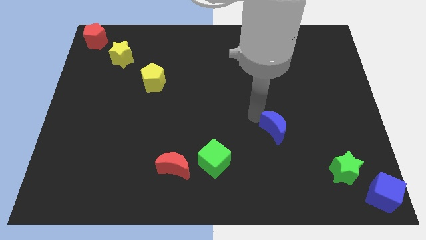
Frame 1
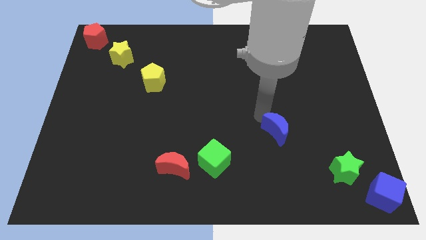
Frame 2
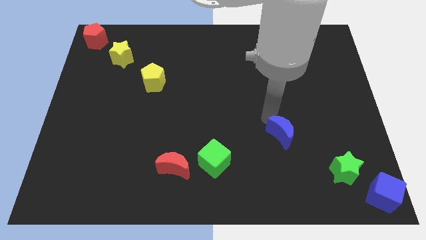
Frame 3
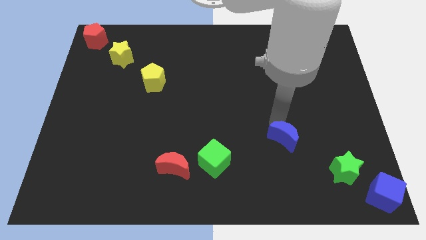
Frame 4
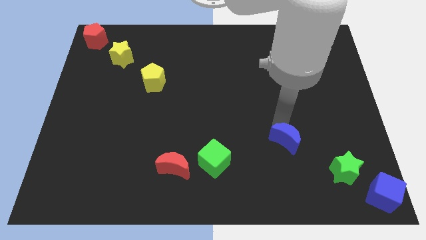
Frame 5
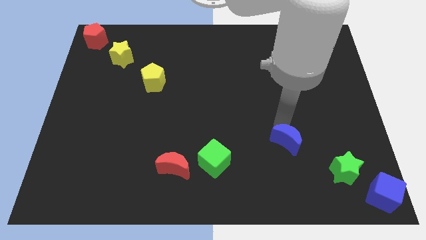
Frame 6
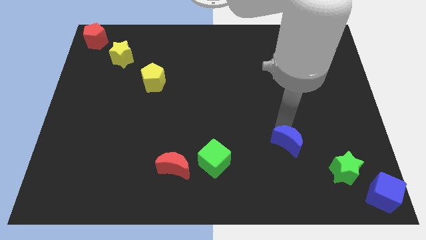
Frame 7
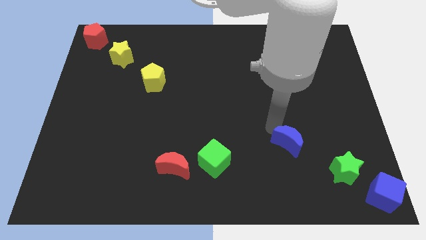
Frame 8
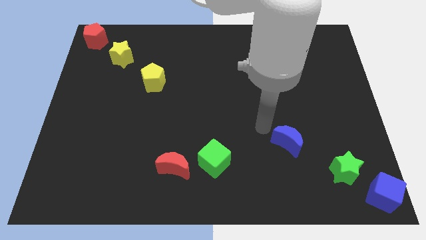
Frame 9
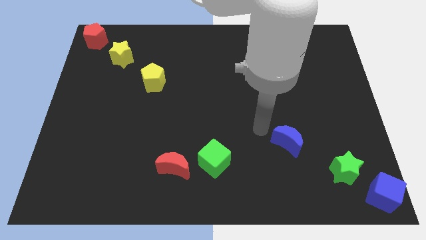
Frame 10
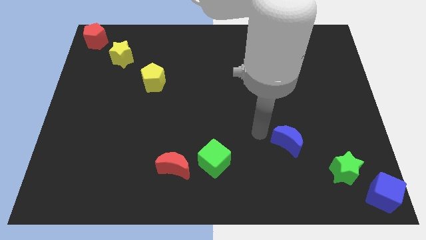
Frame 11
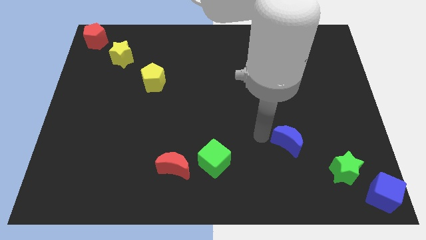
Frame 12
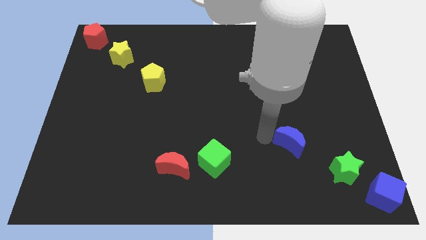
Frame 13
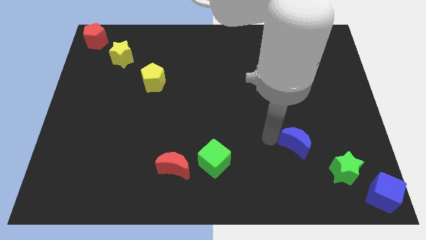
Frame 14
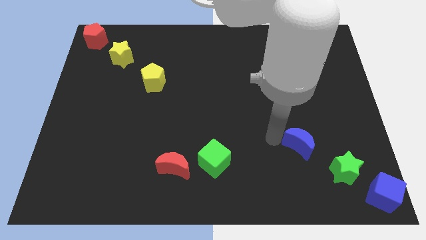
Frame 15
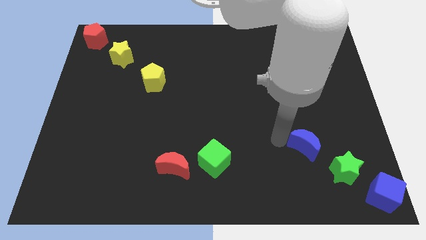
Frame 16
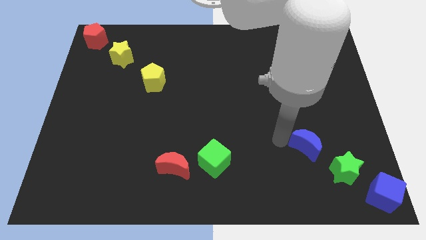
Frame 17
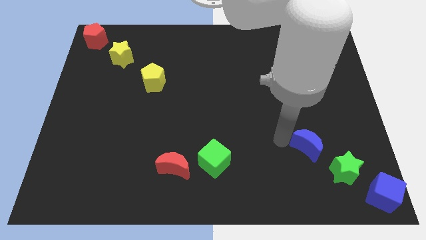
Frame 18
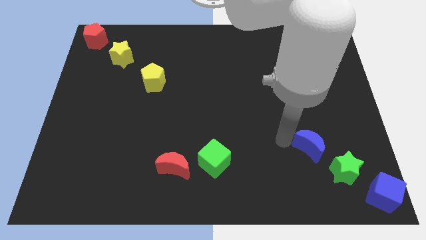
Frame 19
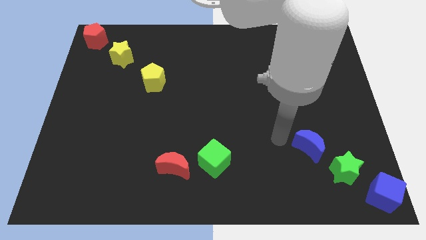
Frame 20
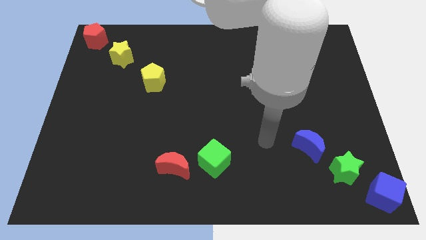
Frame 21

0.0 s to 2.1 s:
move the blue moon to the top left of the green star

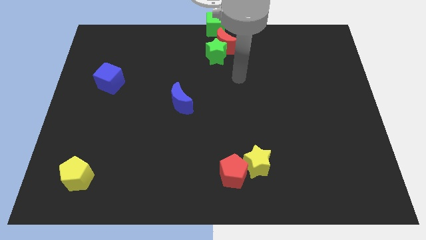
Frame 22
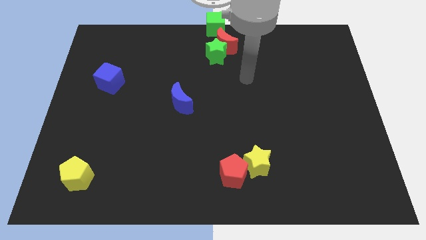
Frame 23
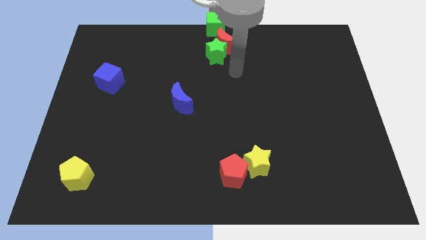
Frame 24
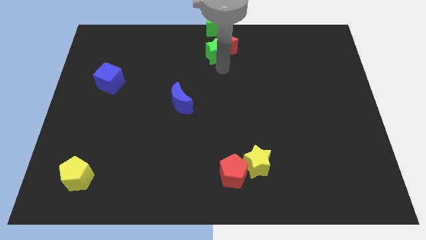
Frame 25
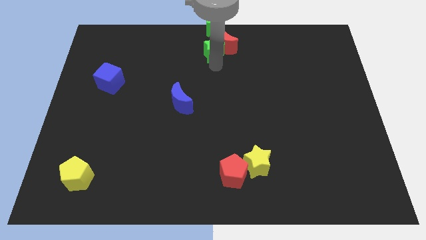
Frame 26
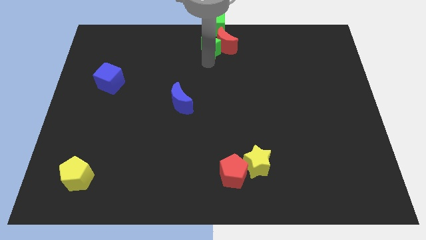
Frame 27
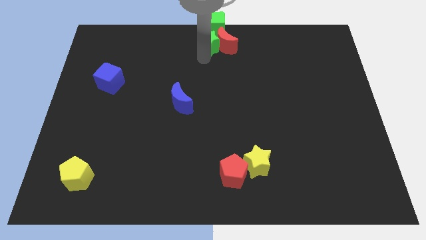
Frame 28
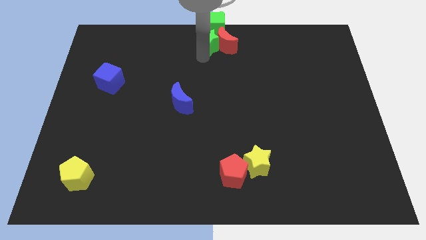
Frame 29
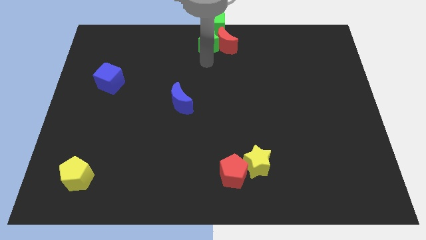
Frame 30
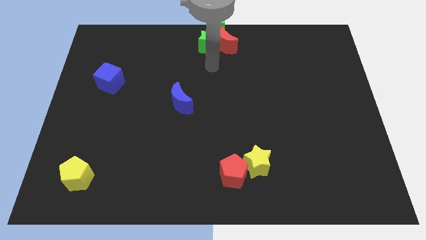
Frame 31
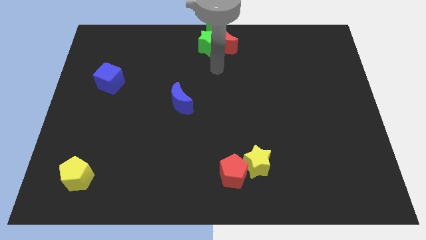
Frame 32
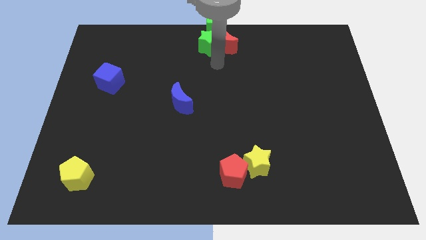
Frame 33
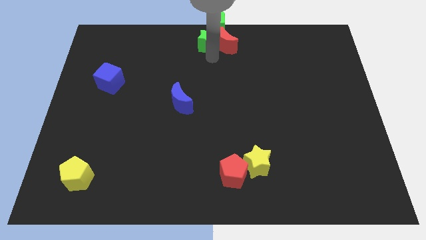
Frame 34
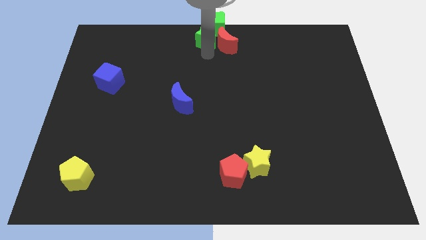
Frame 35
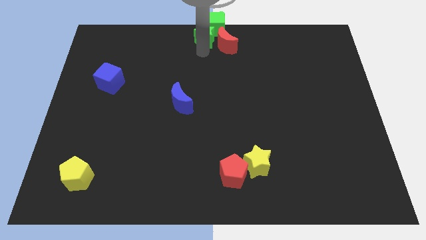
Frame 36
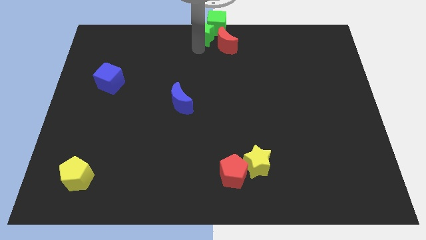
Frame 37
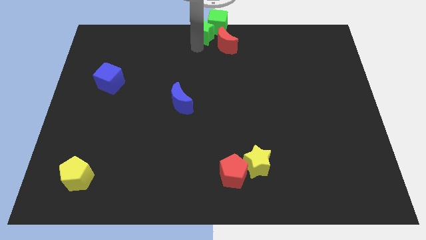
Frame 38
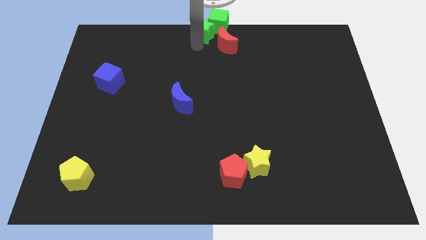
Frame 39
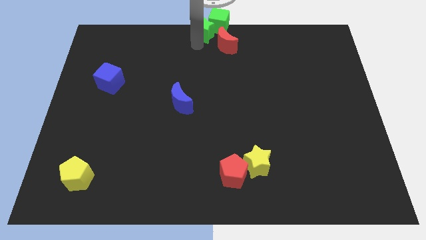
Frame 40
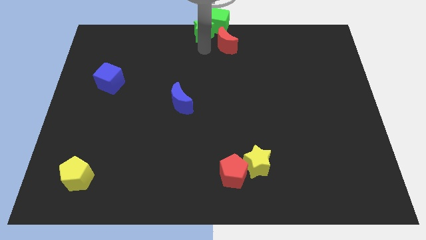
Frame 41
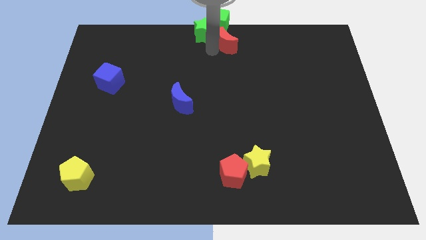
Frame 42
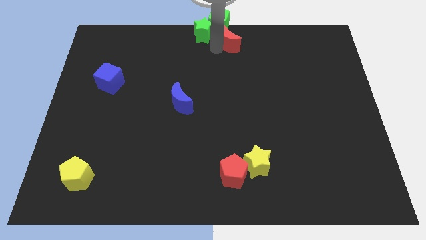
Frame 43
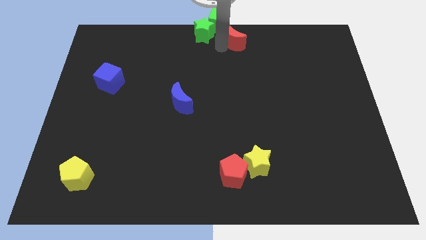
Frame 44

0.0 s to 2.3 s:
push green star into the green cube

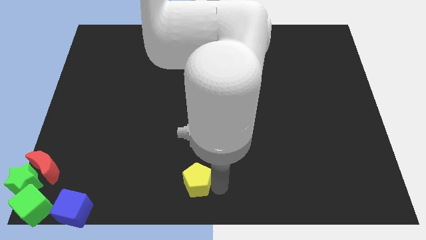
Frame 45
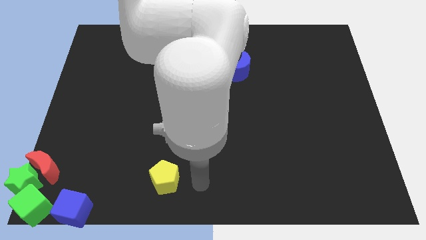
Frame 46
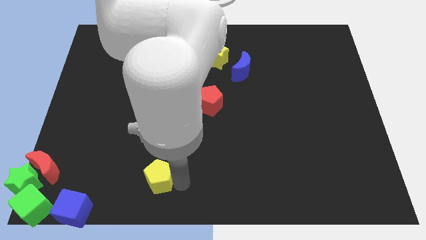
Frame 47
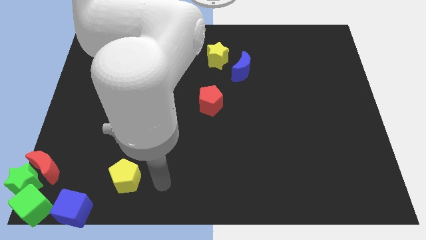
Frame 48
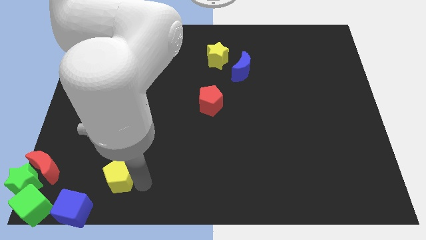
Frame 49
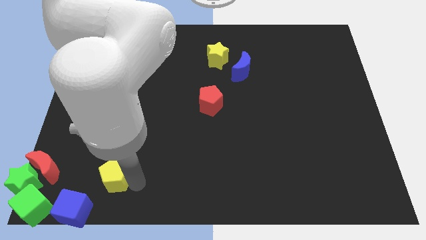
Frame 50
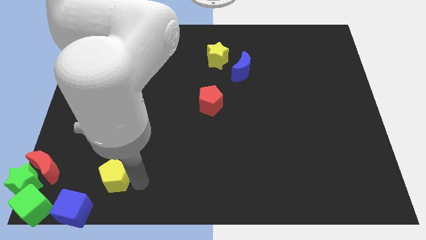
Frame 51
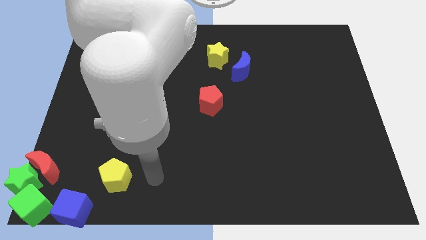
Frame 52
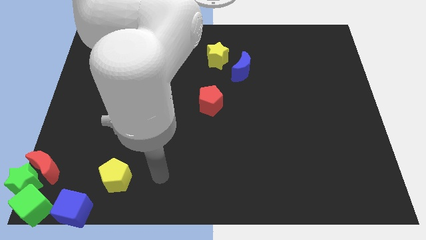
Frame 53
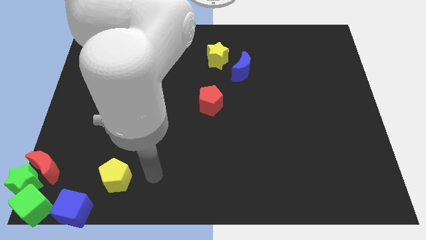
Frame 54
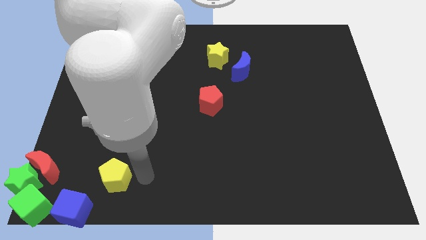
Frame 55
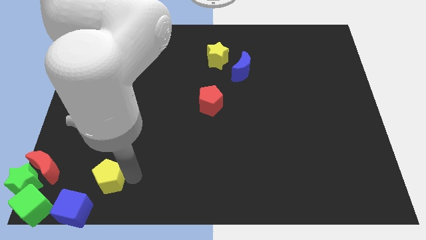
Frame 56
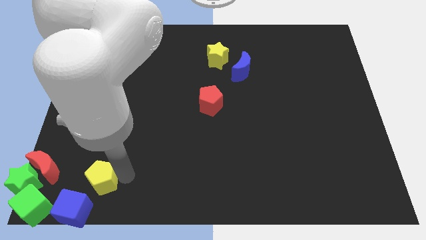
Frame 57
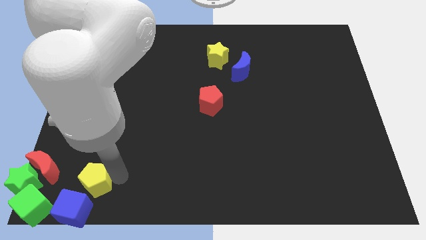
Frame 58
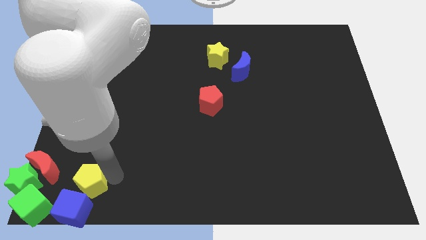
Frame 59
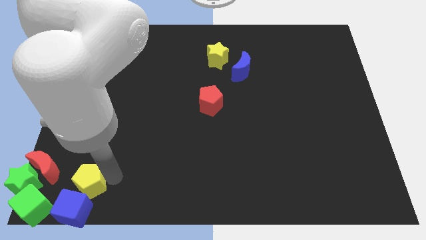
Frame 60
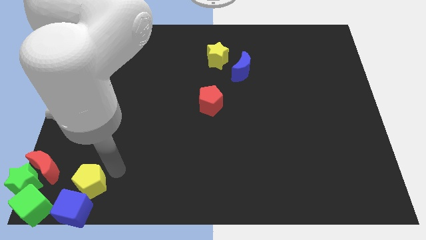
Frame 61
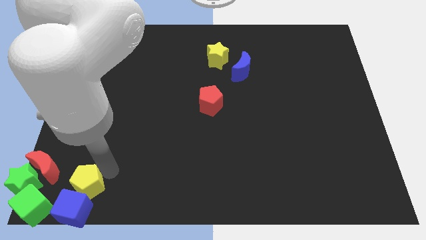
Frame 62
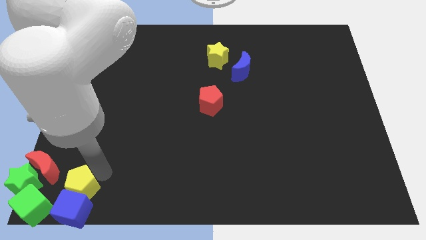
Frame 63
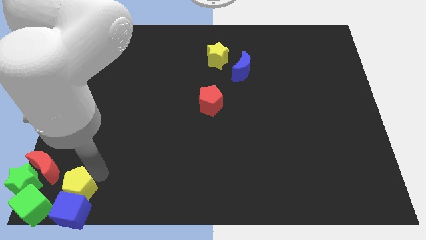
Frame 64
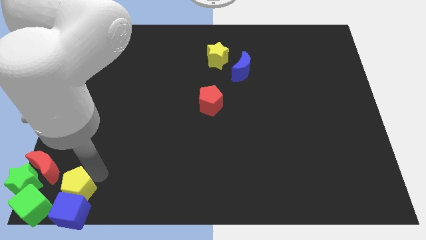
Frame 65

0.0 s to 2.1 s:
move yellow pentagon towards the blue cube

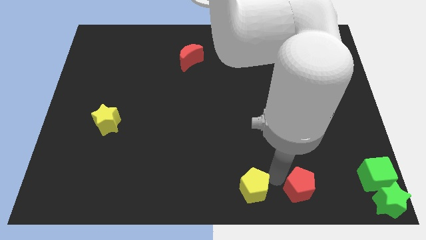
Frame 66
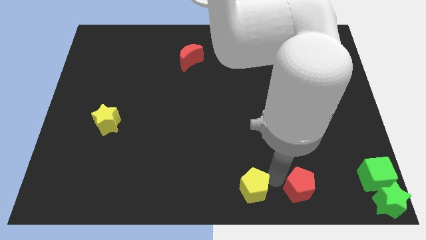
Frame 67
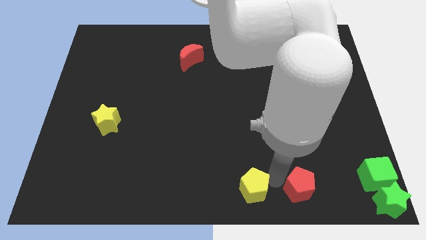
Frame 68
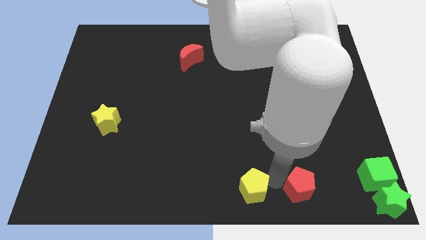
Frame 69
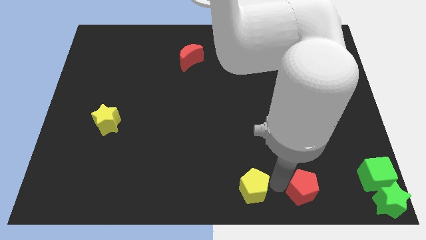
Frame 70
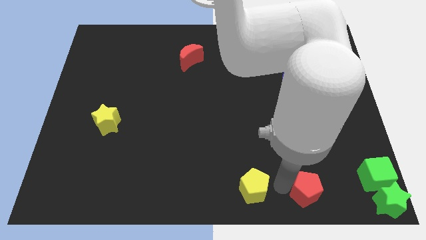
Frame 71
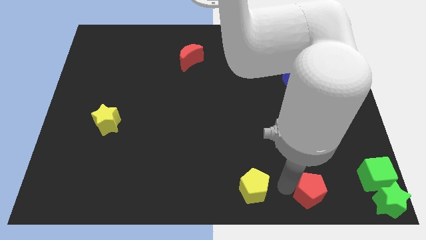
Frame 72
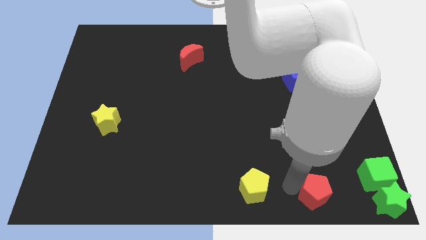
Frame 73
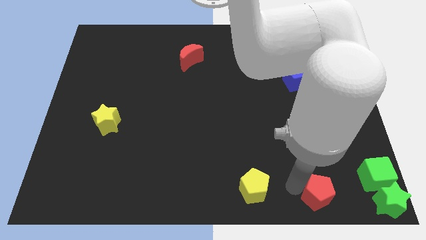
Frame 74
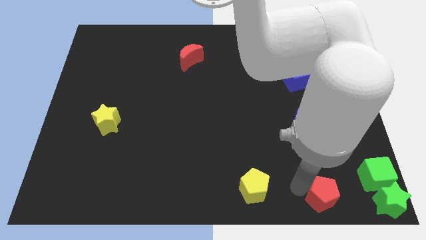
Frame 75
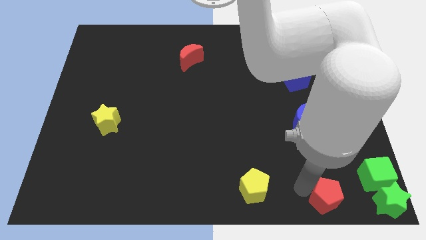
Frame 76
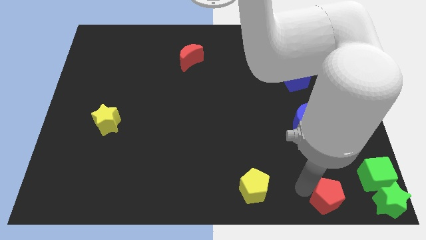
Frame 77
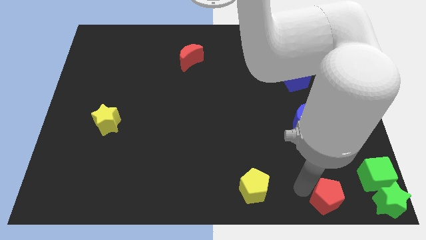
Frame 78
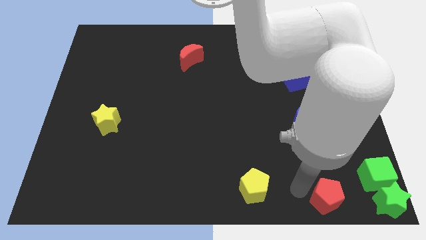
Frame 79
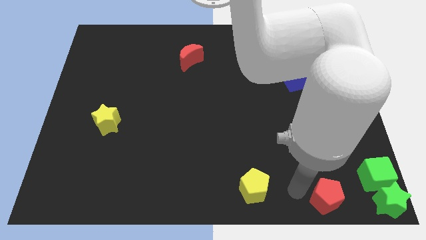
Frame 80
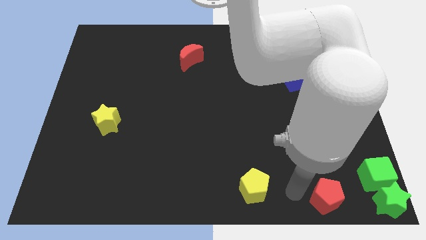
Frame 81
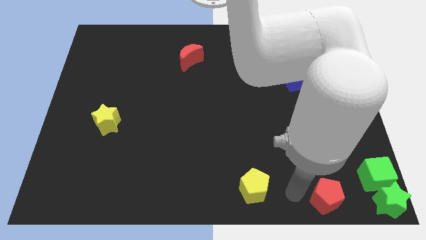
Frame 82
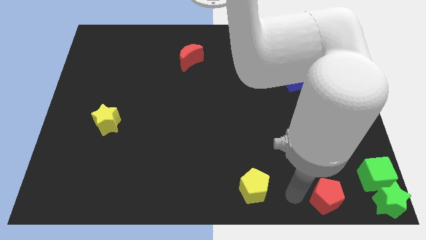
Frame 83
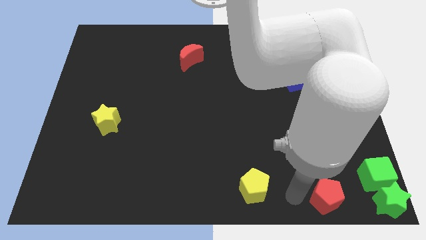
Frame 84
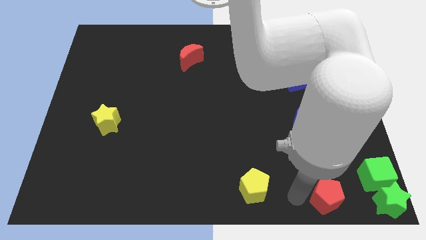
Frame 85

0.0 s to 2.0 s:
move the red pentagon parallel to the left of the green star

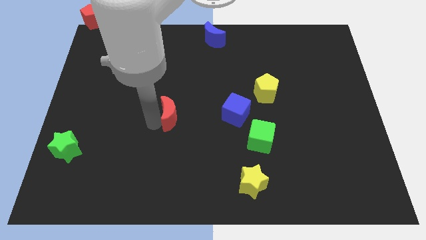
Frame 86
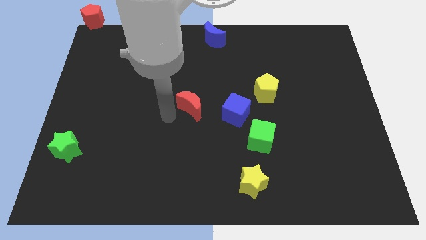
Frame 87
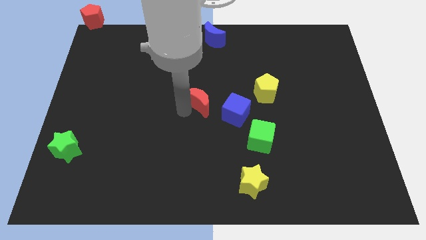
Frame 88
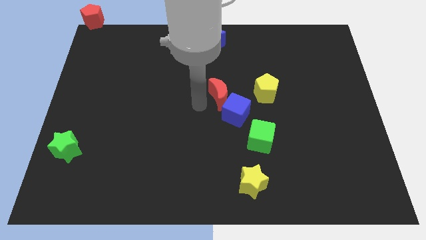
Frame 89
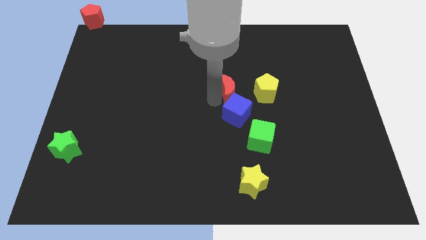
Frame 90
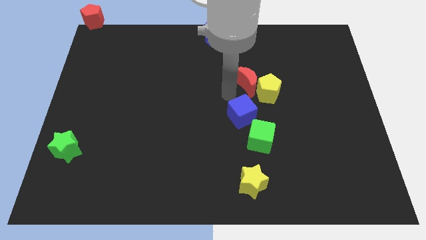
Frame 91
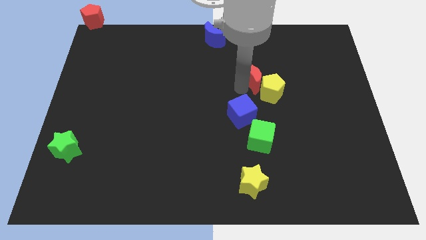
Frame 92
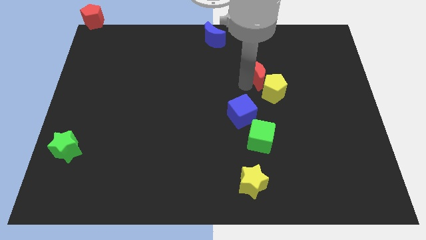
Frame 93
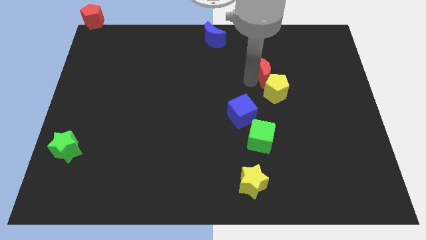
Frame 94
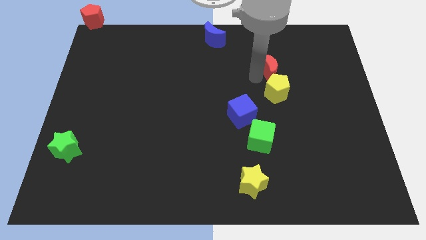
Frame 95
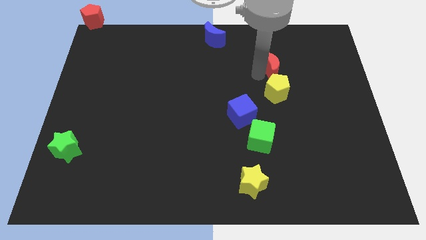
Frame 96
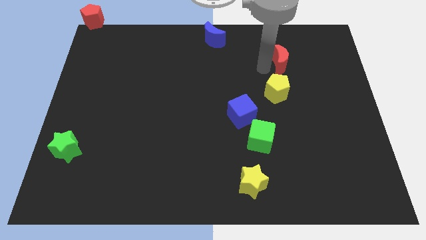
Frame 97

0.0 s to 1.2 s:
put red moon vertically above the yellow pentagon
